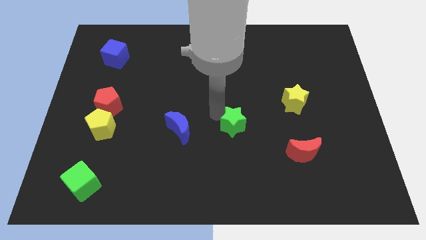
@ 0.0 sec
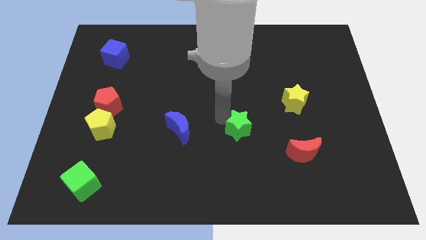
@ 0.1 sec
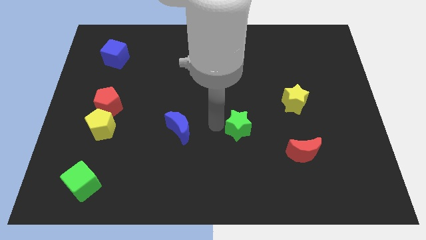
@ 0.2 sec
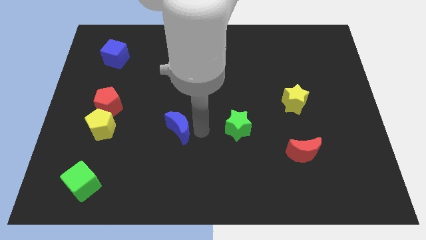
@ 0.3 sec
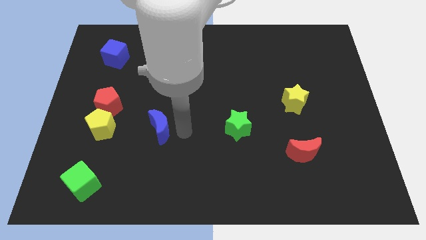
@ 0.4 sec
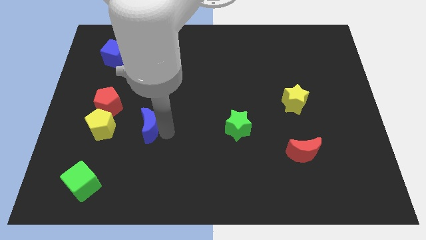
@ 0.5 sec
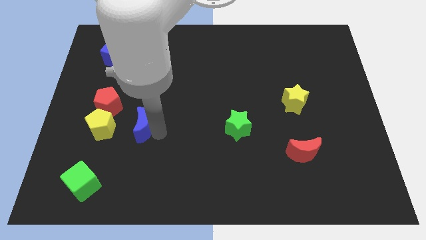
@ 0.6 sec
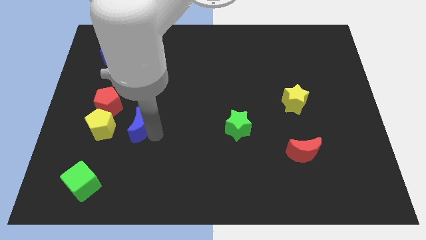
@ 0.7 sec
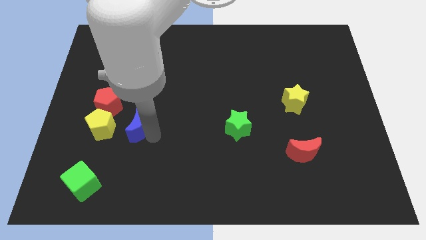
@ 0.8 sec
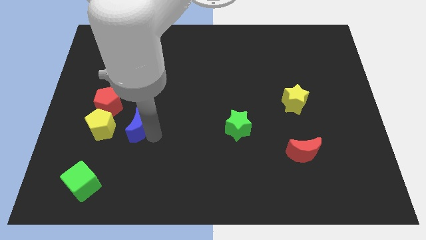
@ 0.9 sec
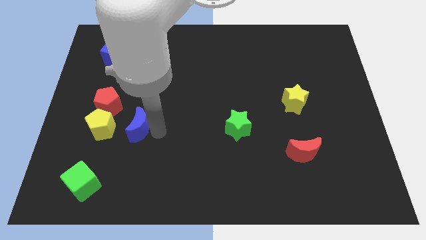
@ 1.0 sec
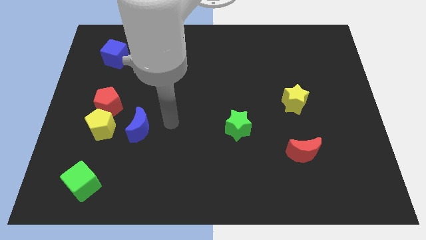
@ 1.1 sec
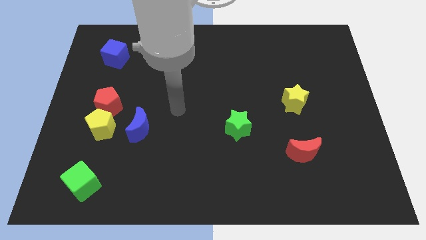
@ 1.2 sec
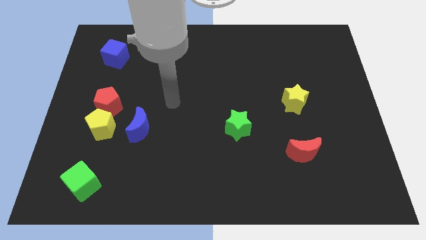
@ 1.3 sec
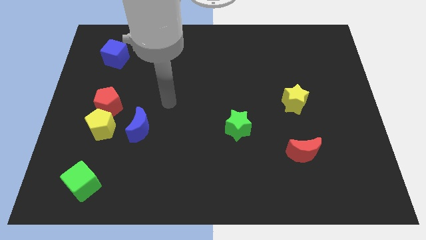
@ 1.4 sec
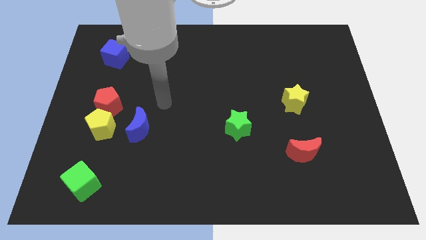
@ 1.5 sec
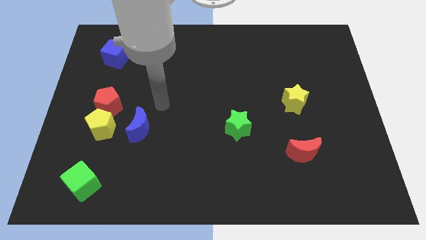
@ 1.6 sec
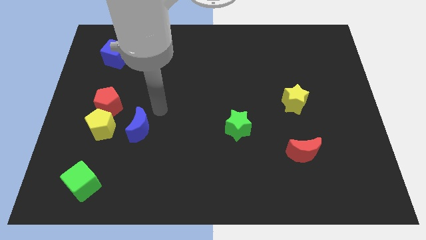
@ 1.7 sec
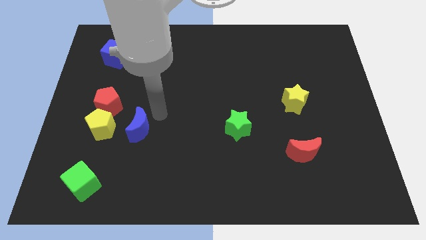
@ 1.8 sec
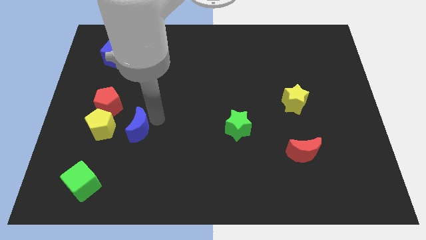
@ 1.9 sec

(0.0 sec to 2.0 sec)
place the blue crescent right of the yellow and red pentagon

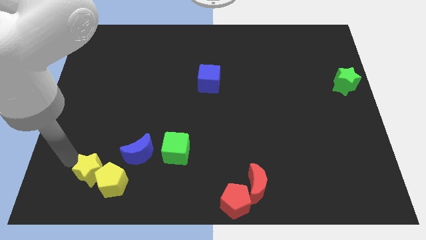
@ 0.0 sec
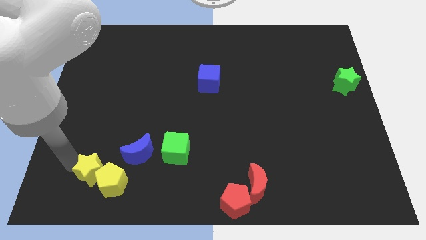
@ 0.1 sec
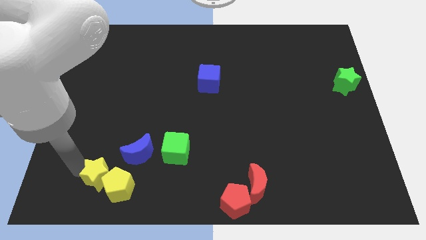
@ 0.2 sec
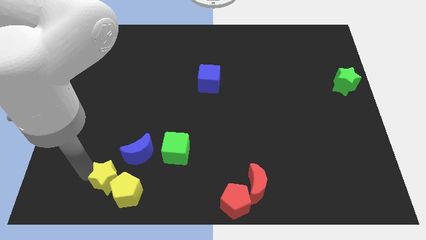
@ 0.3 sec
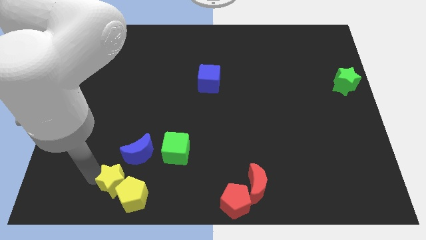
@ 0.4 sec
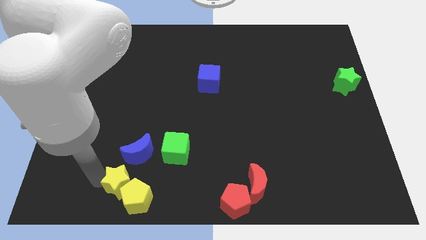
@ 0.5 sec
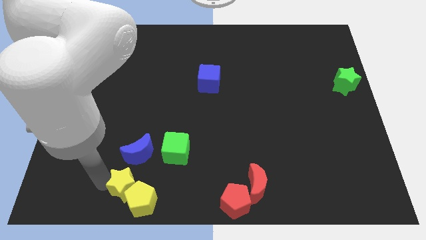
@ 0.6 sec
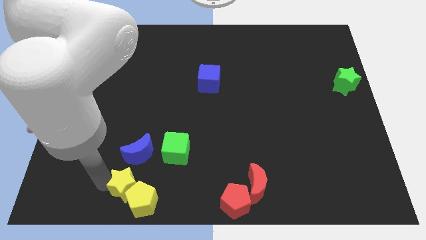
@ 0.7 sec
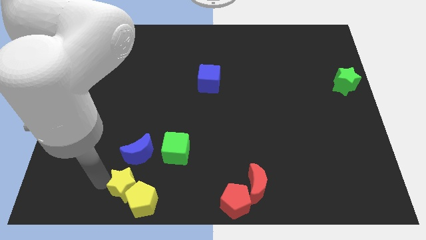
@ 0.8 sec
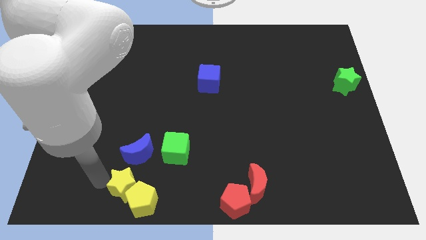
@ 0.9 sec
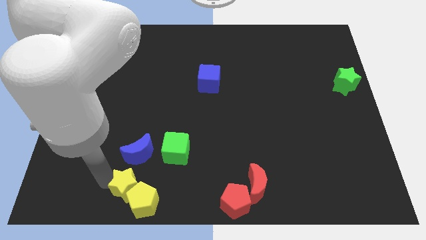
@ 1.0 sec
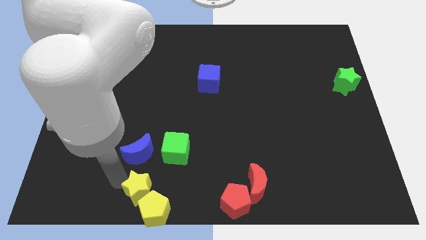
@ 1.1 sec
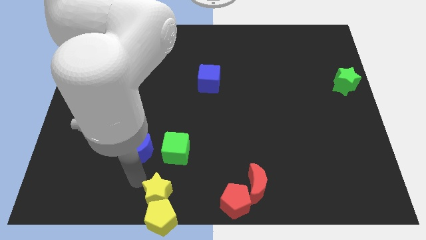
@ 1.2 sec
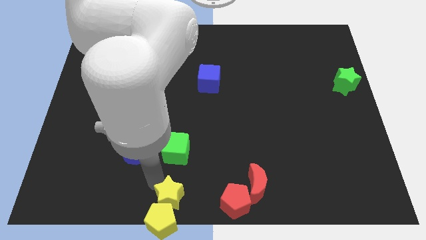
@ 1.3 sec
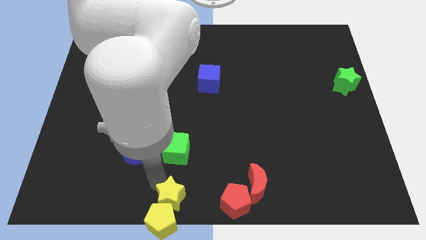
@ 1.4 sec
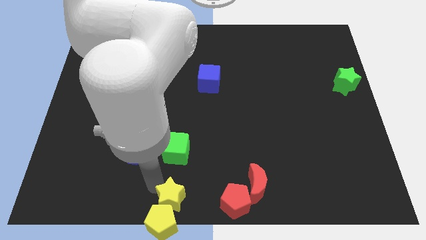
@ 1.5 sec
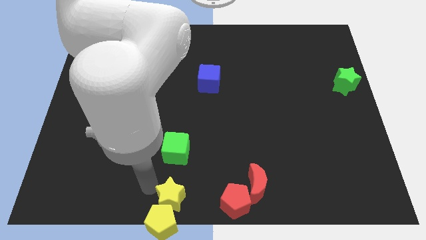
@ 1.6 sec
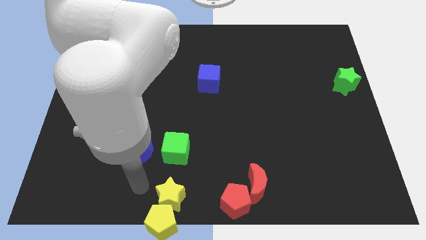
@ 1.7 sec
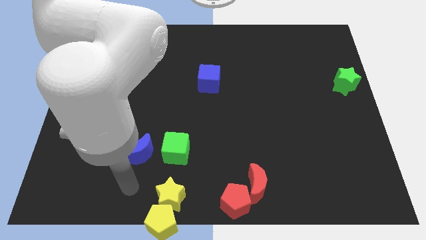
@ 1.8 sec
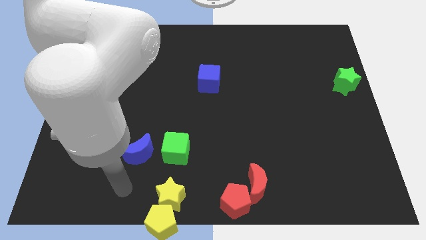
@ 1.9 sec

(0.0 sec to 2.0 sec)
put the yellow blocks below the green cube

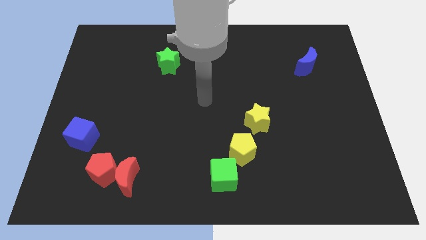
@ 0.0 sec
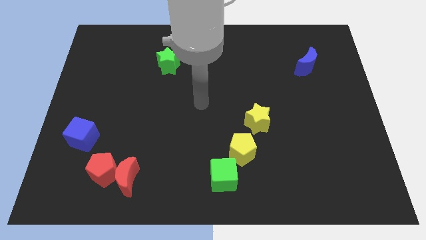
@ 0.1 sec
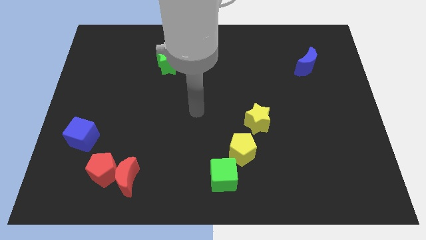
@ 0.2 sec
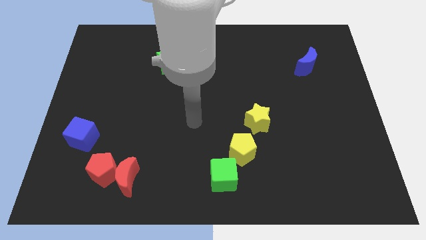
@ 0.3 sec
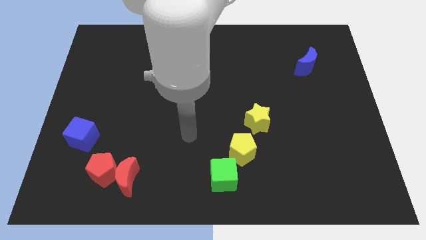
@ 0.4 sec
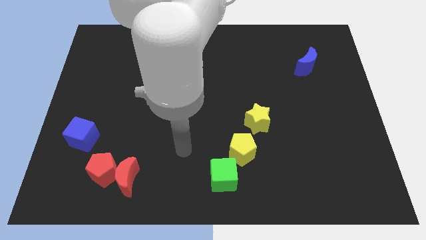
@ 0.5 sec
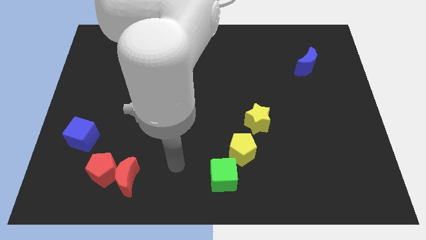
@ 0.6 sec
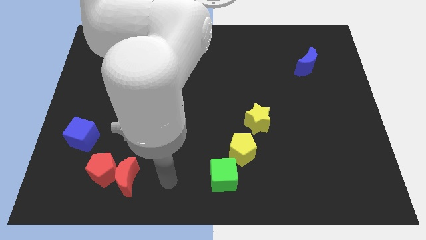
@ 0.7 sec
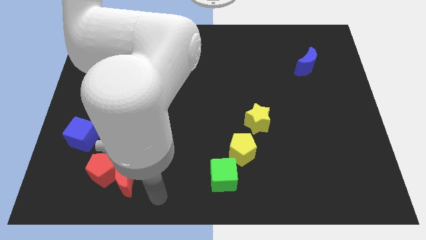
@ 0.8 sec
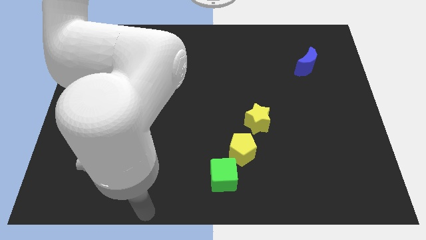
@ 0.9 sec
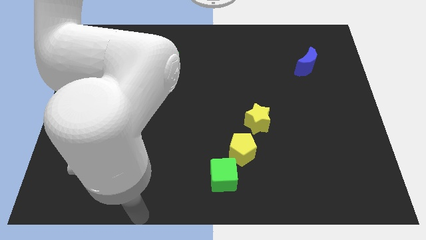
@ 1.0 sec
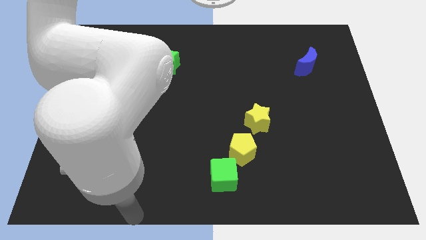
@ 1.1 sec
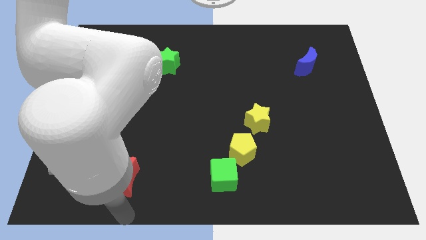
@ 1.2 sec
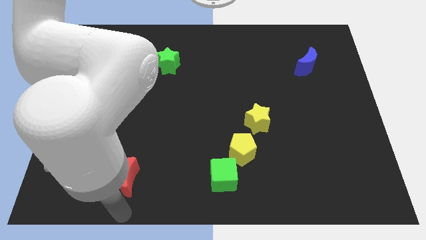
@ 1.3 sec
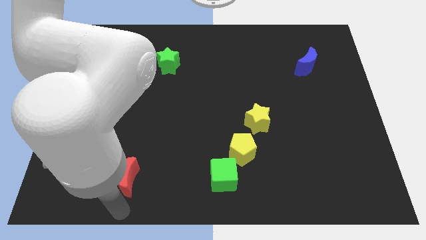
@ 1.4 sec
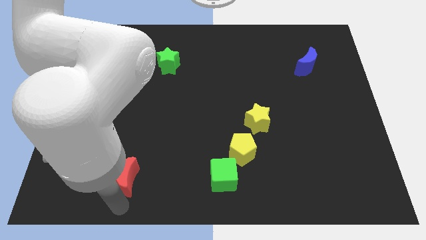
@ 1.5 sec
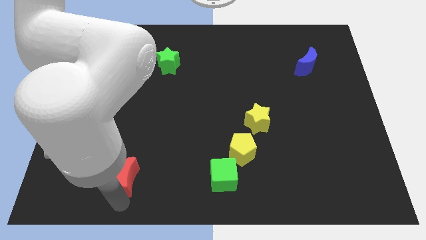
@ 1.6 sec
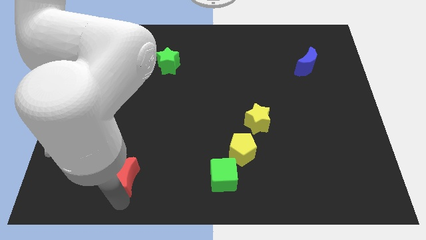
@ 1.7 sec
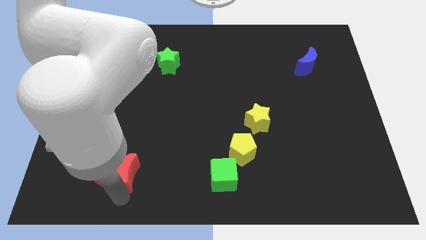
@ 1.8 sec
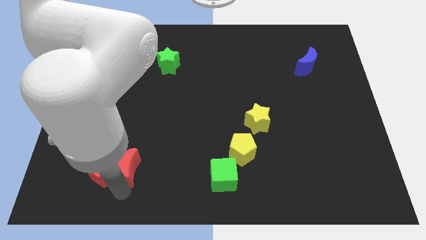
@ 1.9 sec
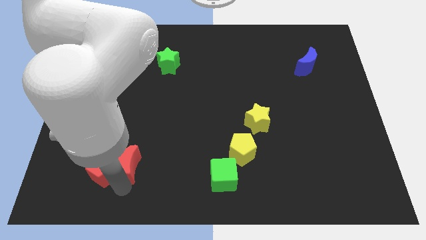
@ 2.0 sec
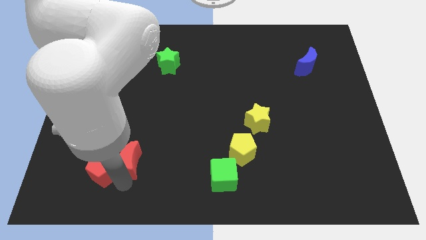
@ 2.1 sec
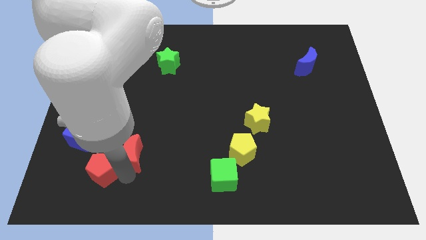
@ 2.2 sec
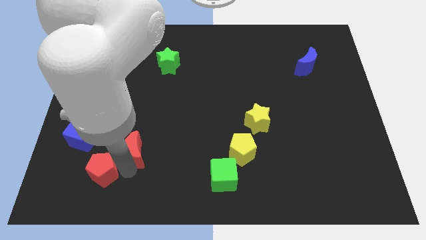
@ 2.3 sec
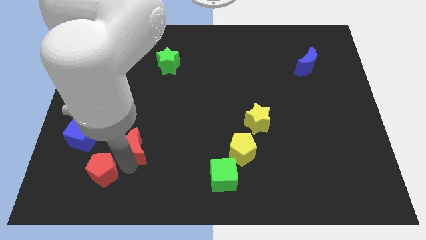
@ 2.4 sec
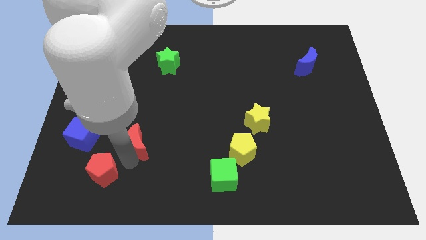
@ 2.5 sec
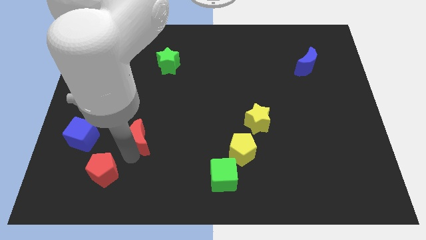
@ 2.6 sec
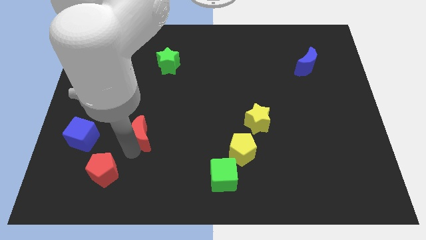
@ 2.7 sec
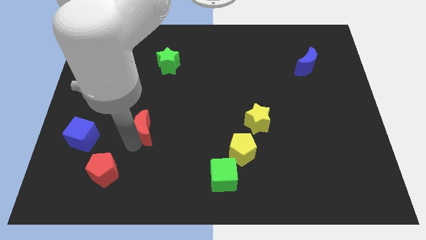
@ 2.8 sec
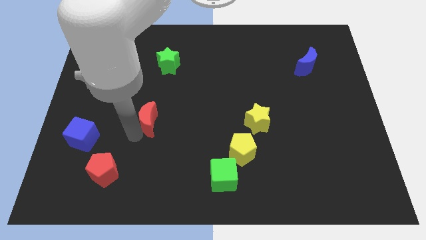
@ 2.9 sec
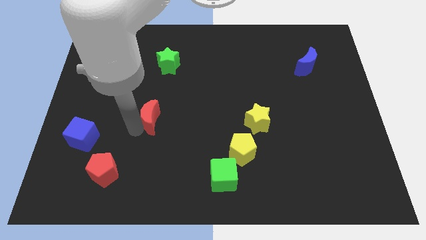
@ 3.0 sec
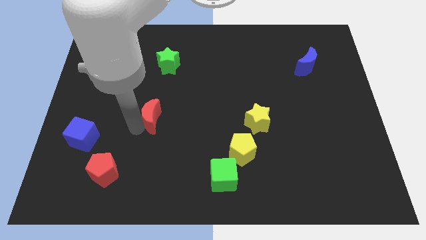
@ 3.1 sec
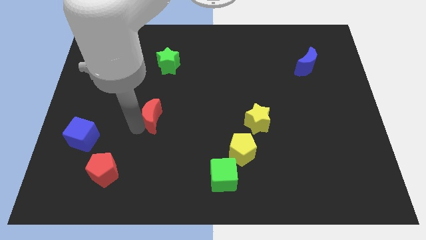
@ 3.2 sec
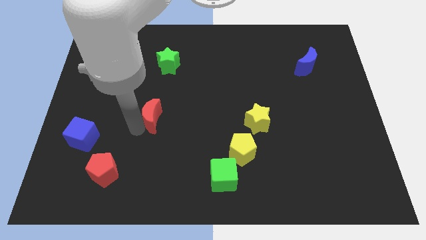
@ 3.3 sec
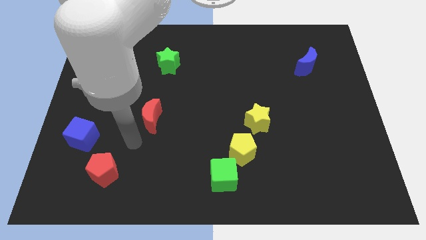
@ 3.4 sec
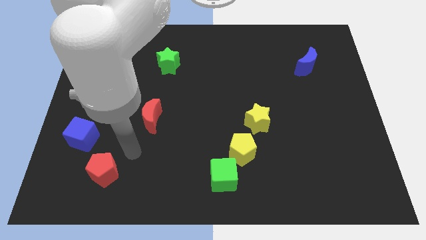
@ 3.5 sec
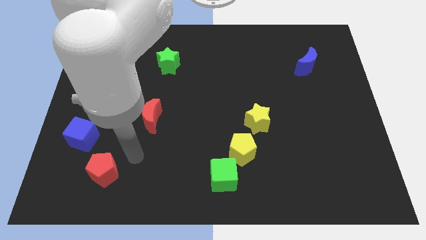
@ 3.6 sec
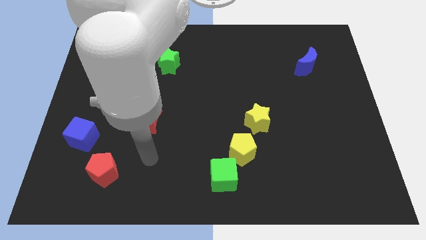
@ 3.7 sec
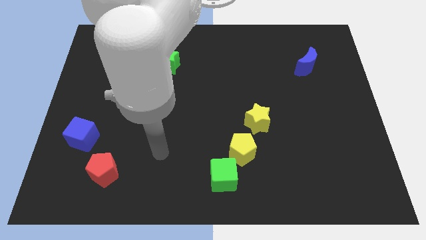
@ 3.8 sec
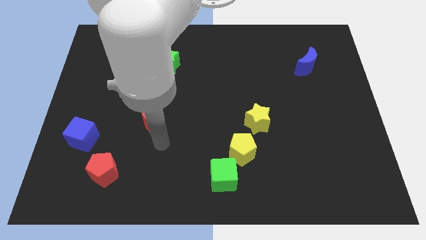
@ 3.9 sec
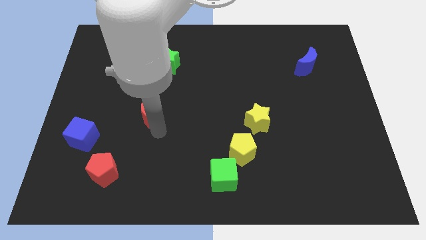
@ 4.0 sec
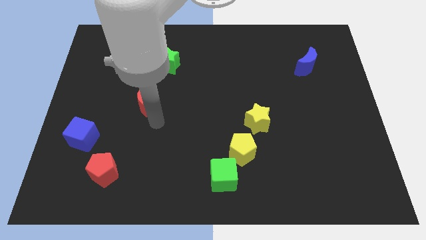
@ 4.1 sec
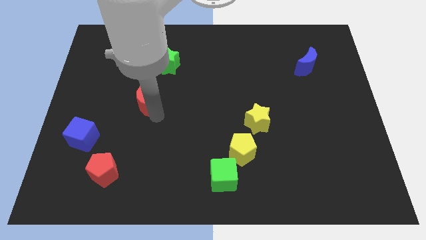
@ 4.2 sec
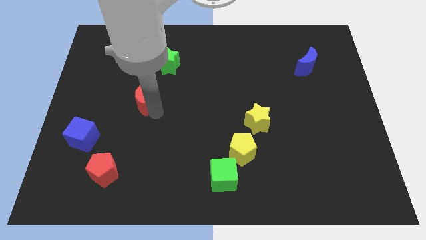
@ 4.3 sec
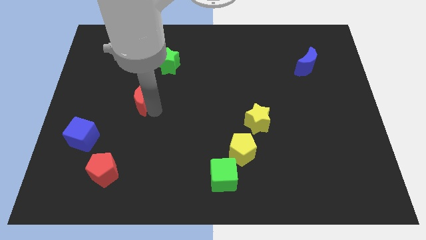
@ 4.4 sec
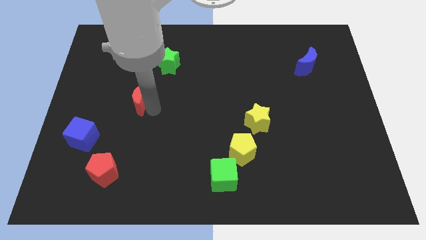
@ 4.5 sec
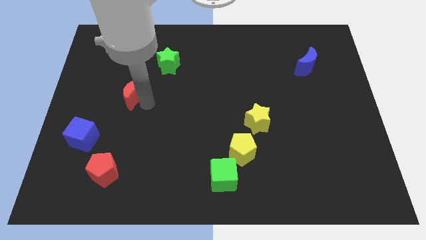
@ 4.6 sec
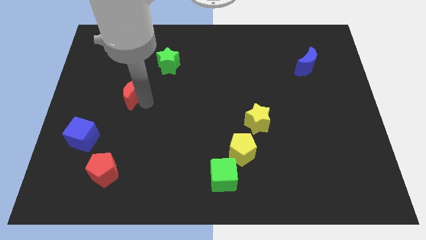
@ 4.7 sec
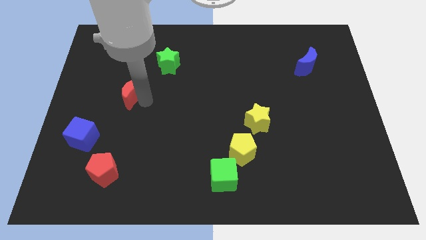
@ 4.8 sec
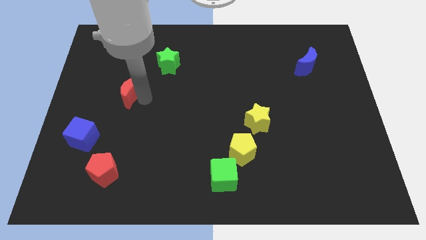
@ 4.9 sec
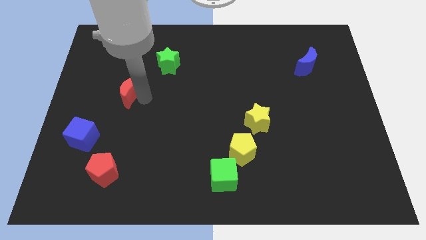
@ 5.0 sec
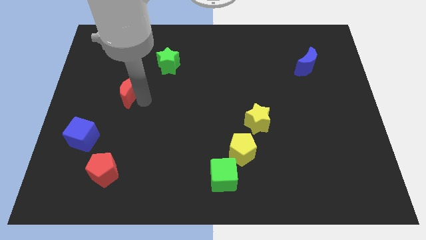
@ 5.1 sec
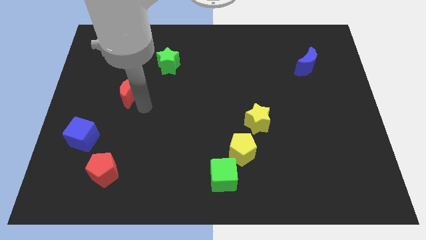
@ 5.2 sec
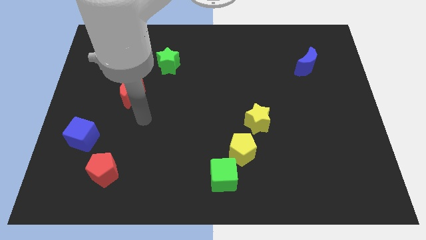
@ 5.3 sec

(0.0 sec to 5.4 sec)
place the red crescent diagonally in between the green star and blue cube
